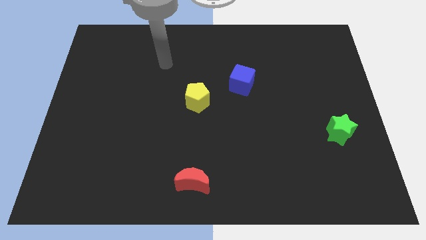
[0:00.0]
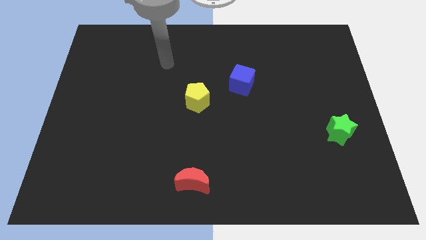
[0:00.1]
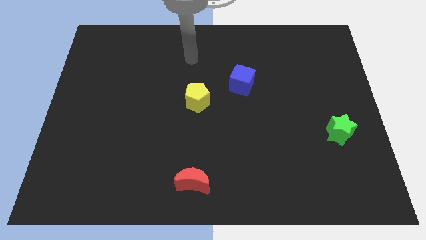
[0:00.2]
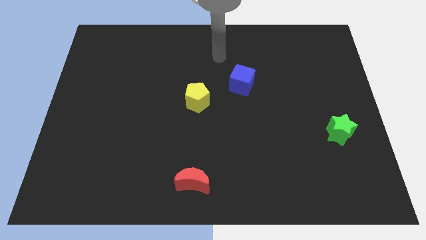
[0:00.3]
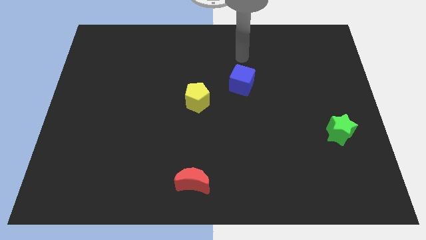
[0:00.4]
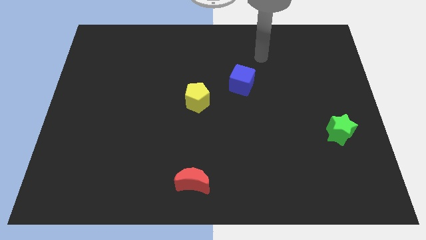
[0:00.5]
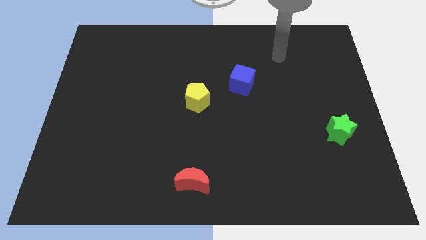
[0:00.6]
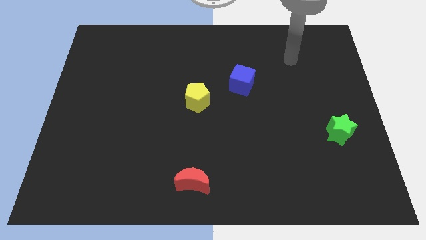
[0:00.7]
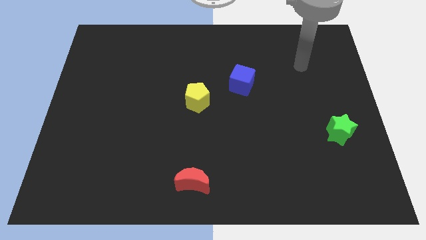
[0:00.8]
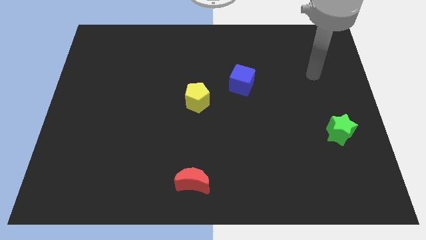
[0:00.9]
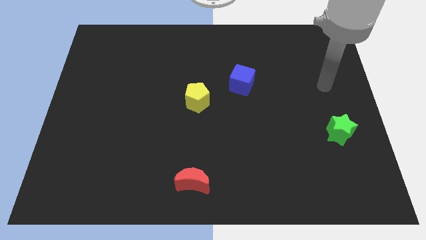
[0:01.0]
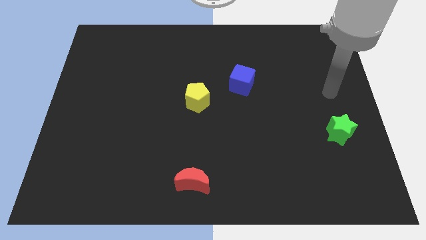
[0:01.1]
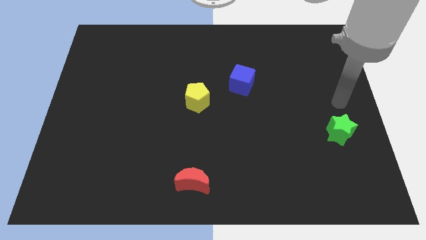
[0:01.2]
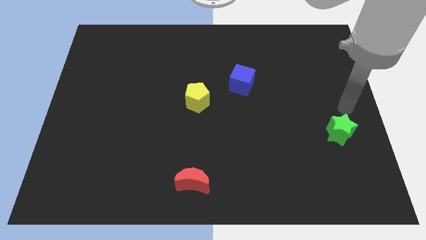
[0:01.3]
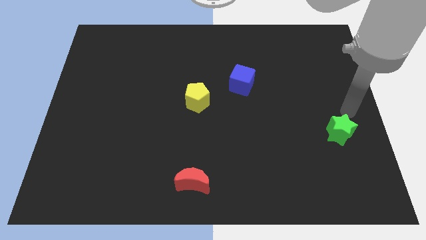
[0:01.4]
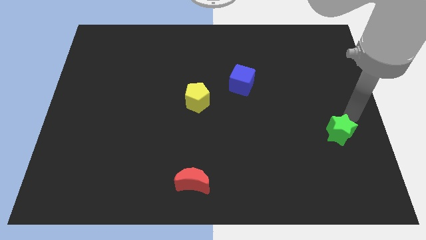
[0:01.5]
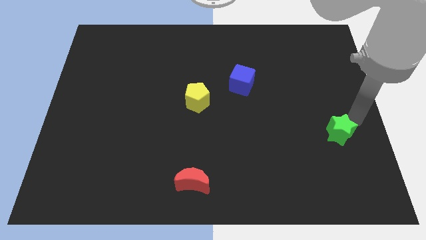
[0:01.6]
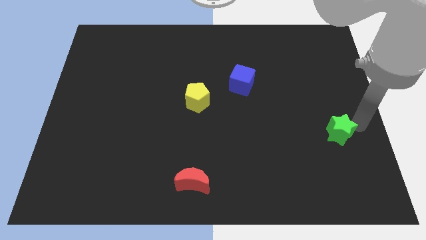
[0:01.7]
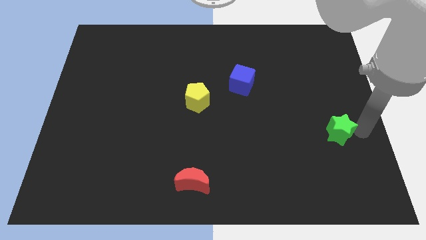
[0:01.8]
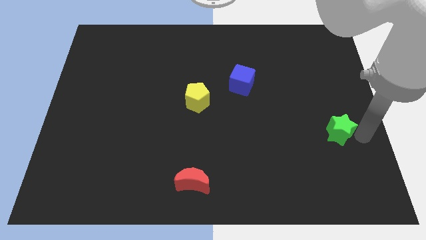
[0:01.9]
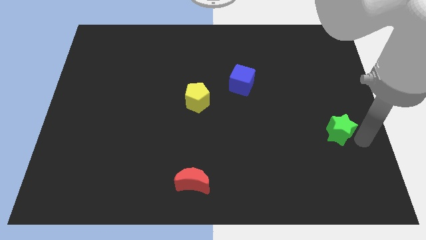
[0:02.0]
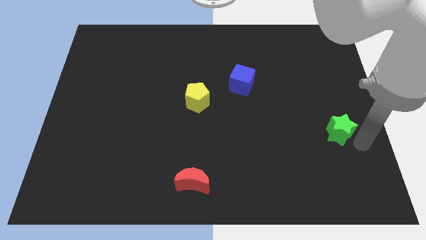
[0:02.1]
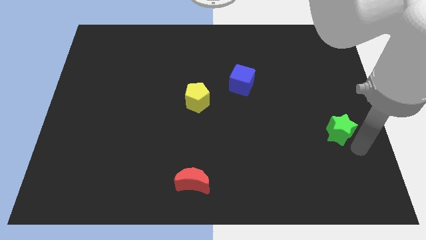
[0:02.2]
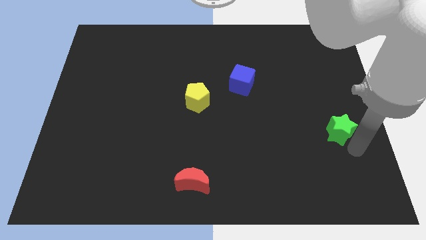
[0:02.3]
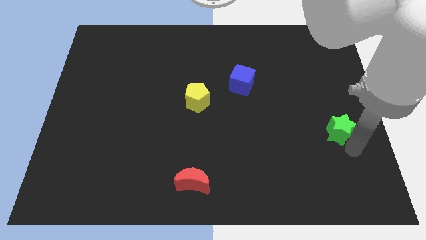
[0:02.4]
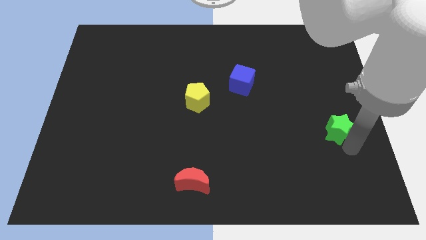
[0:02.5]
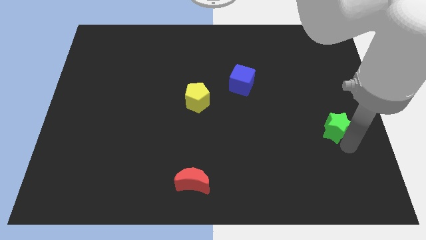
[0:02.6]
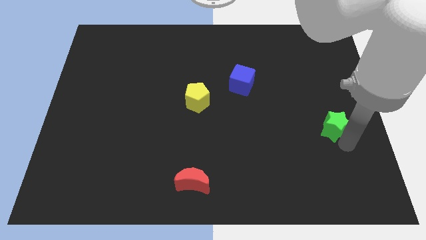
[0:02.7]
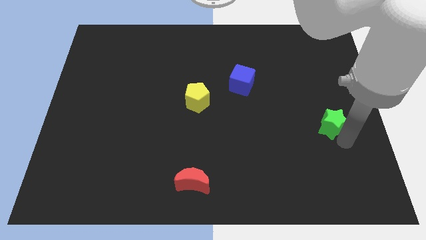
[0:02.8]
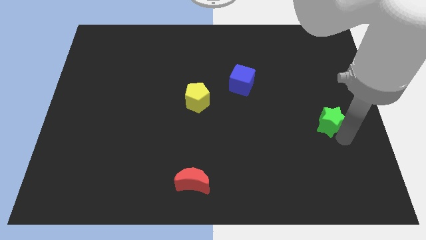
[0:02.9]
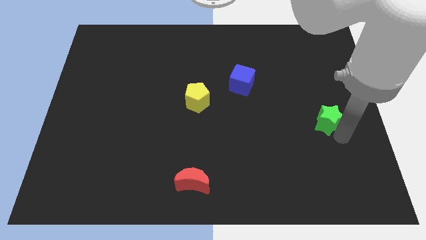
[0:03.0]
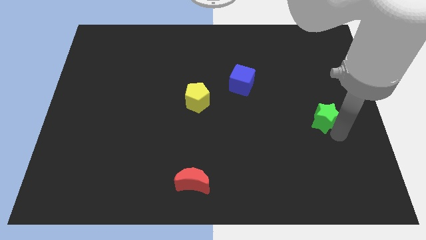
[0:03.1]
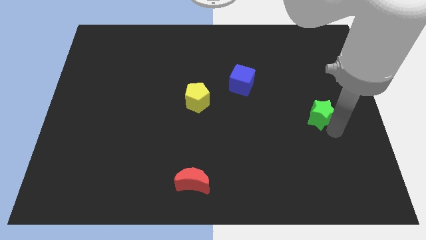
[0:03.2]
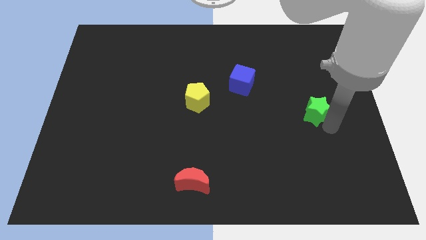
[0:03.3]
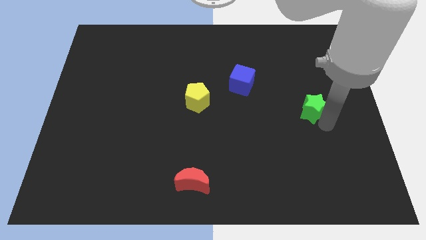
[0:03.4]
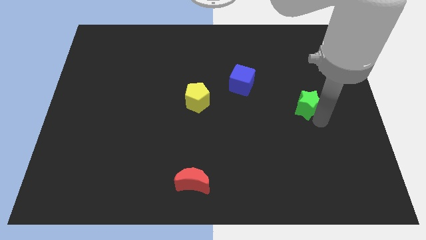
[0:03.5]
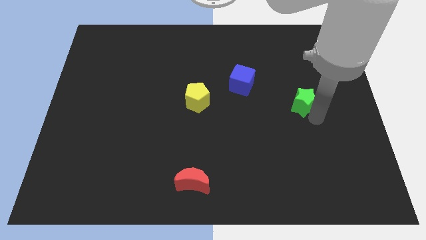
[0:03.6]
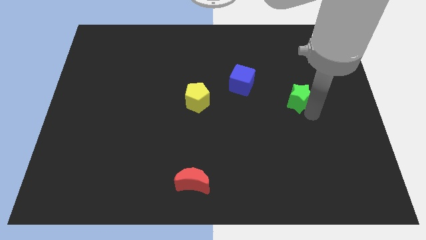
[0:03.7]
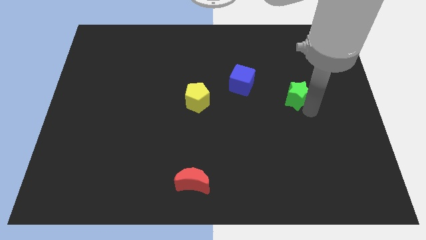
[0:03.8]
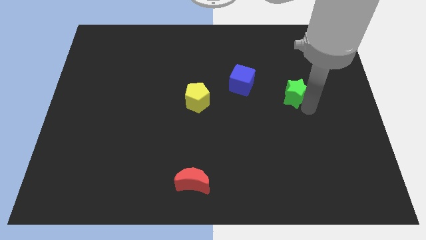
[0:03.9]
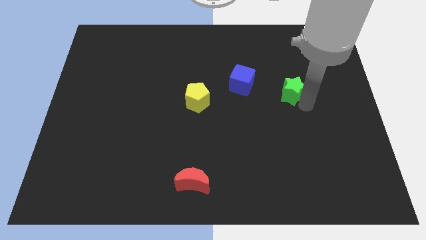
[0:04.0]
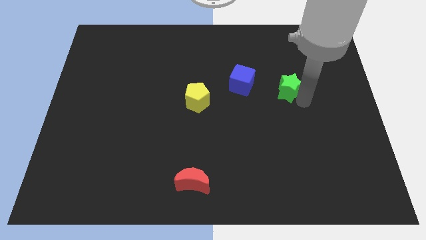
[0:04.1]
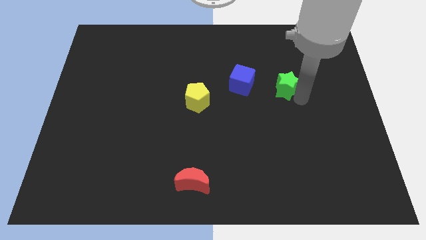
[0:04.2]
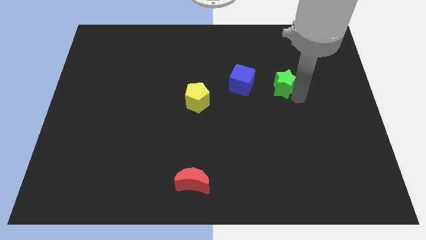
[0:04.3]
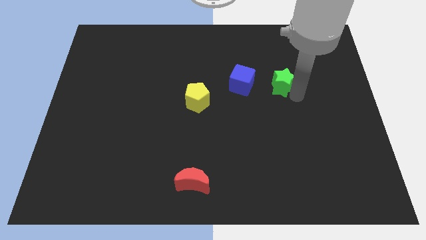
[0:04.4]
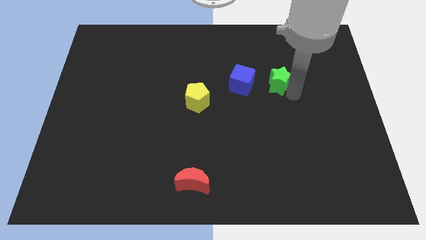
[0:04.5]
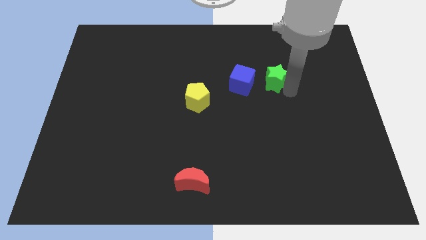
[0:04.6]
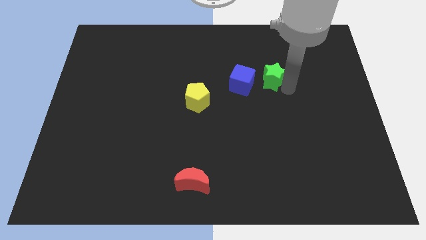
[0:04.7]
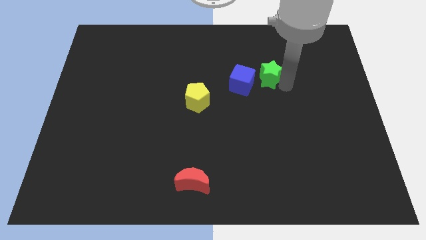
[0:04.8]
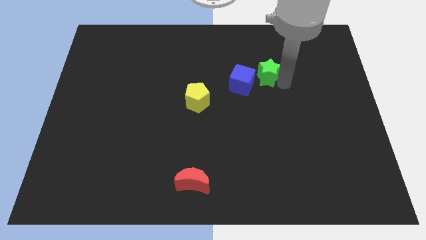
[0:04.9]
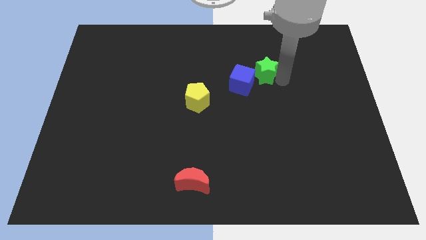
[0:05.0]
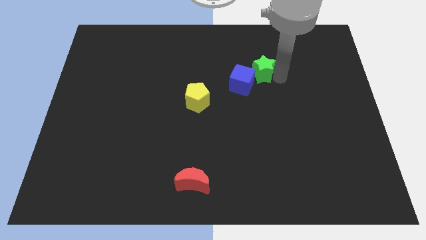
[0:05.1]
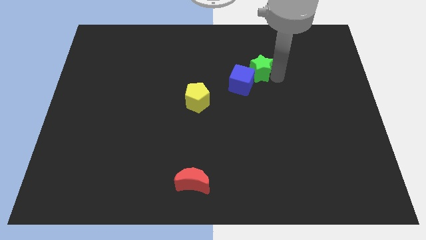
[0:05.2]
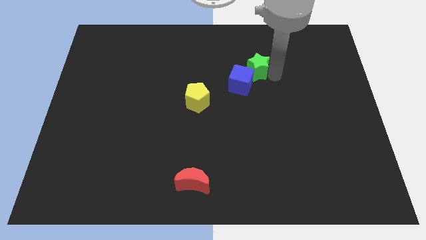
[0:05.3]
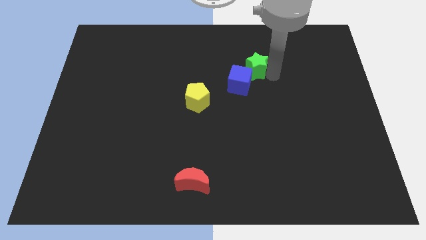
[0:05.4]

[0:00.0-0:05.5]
put the green block towards the cube

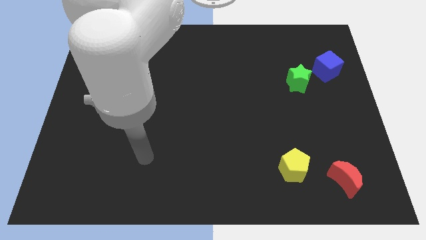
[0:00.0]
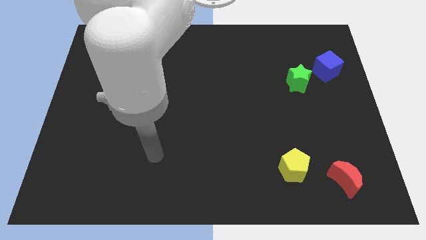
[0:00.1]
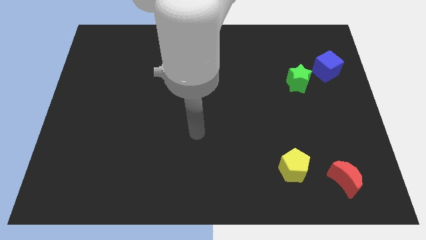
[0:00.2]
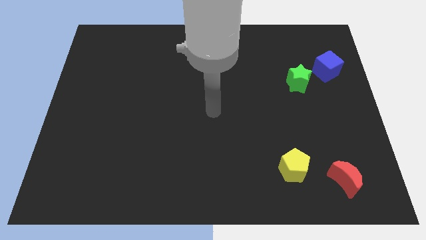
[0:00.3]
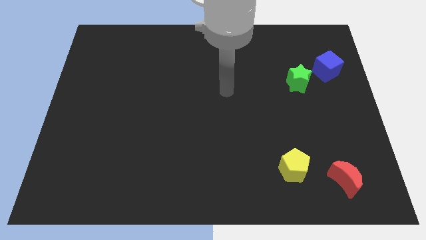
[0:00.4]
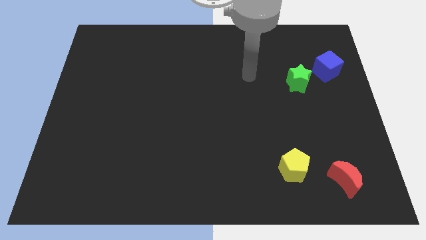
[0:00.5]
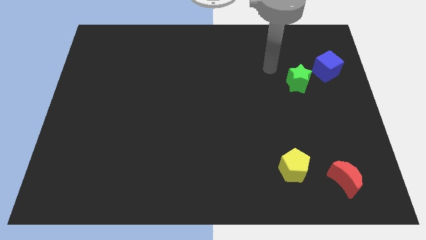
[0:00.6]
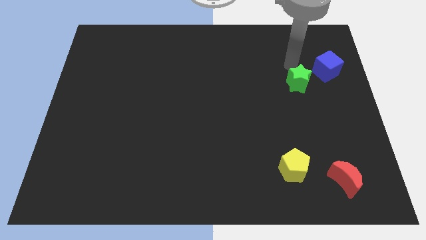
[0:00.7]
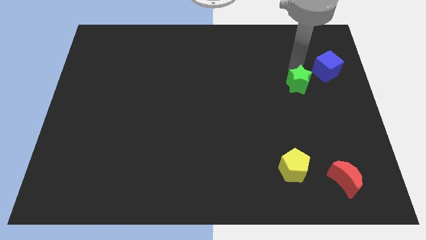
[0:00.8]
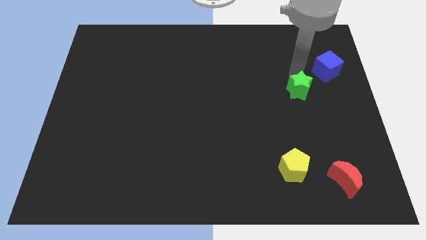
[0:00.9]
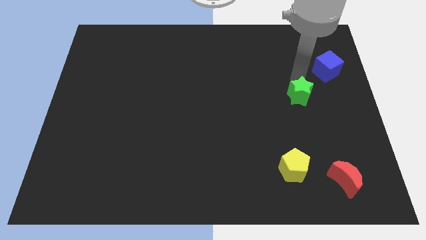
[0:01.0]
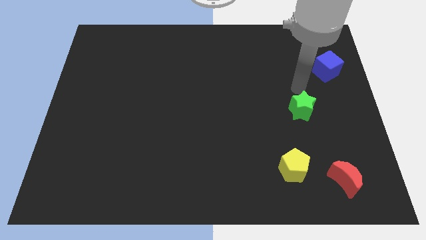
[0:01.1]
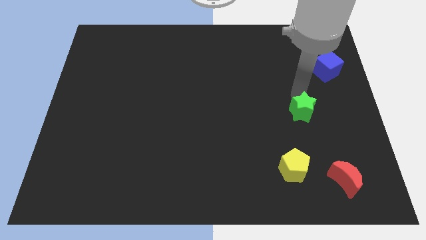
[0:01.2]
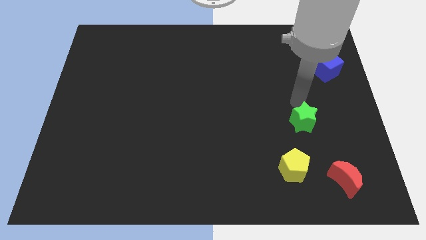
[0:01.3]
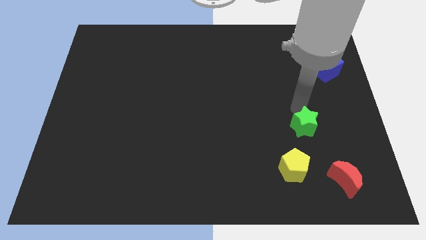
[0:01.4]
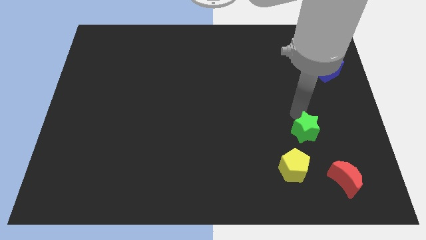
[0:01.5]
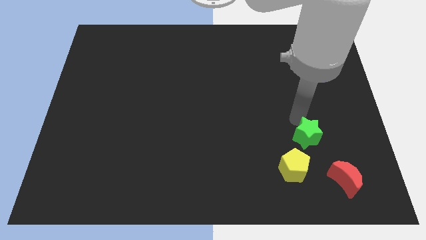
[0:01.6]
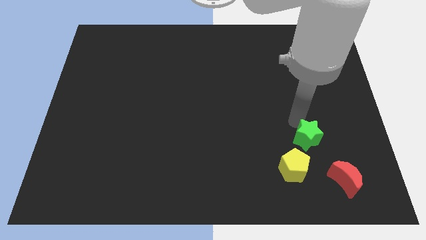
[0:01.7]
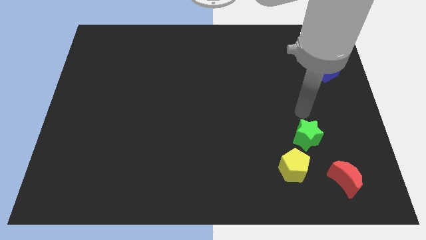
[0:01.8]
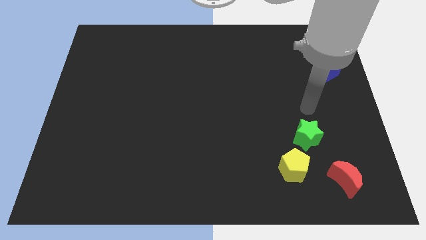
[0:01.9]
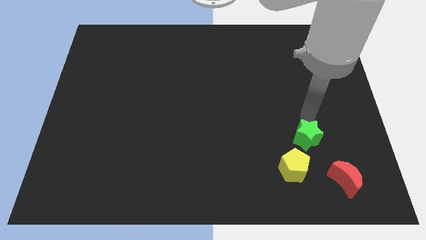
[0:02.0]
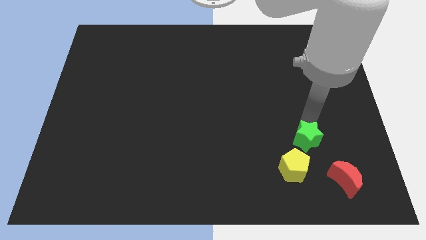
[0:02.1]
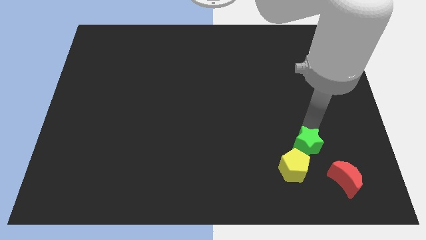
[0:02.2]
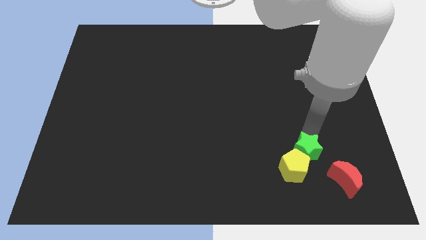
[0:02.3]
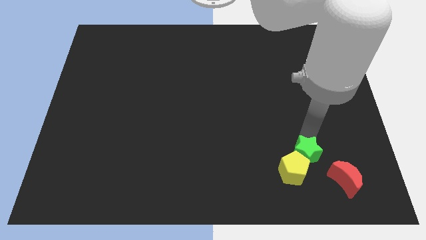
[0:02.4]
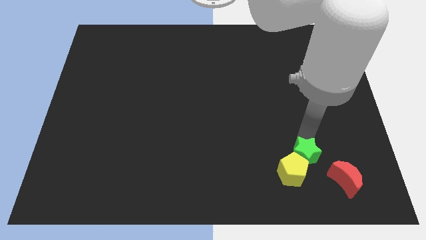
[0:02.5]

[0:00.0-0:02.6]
push the green star to the pentagon

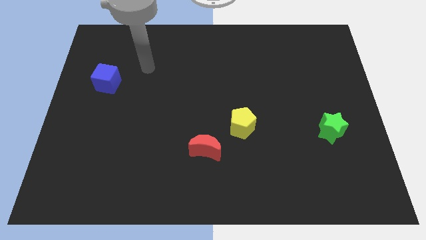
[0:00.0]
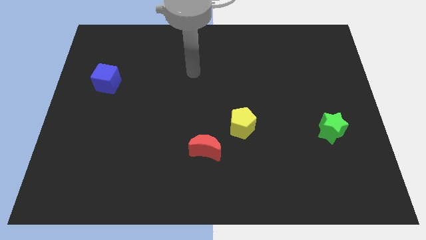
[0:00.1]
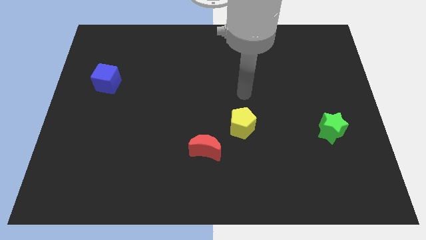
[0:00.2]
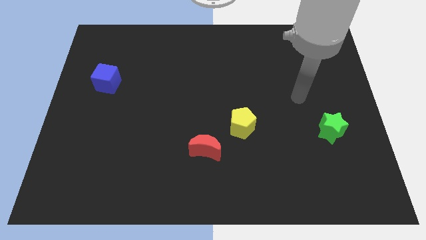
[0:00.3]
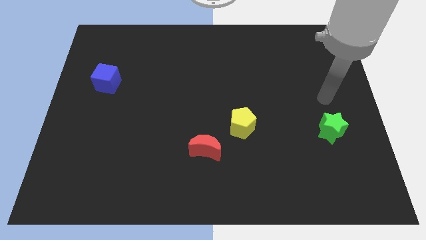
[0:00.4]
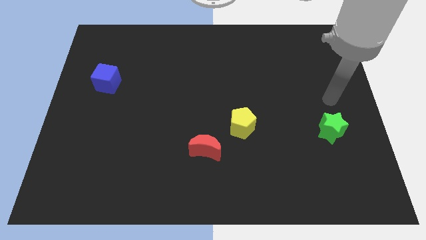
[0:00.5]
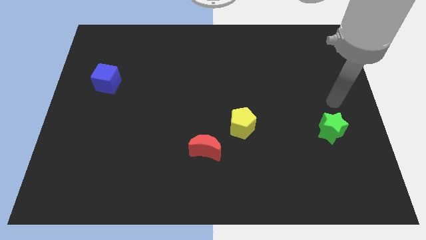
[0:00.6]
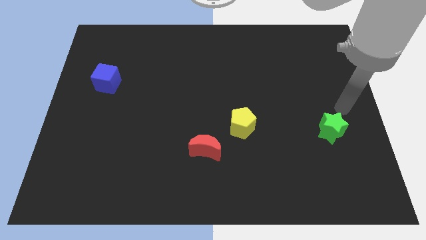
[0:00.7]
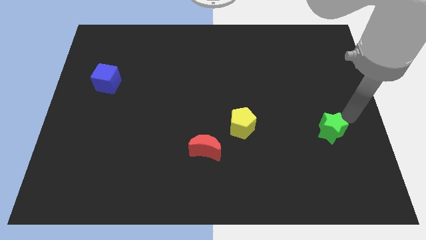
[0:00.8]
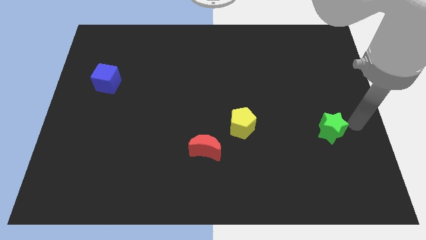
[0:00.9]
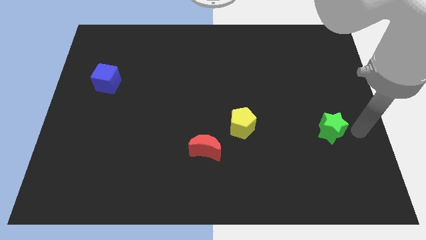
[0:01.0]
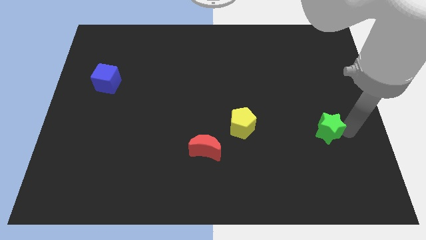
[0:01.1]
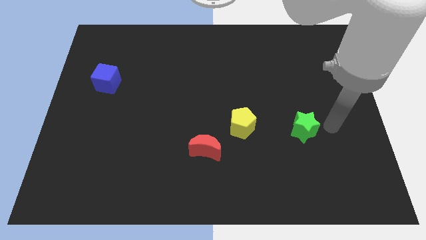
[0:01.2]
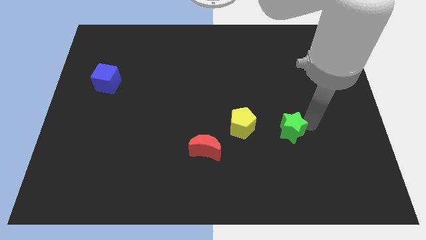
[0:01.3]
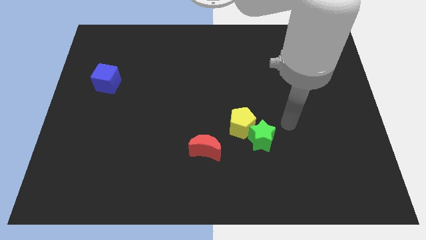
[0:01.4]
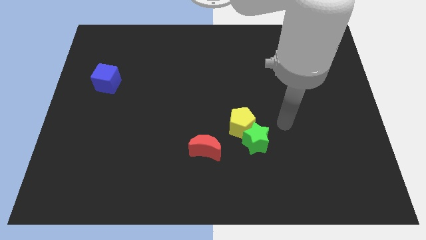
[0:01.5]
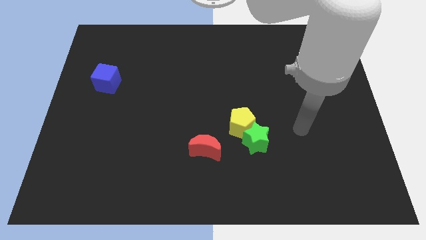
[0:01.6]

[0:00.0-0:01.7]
move the star to the yellow block
